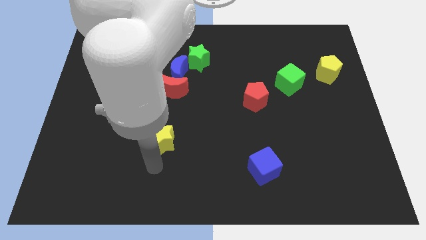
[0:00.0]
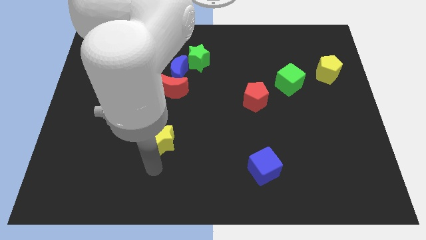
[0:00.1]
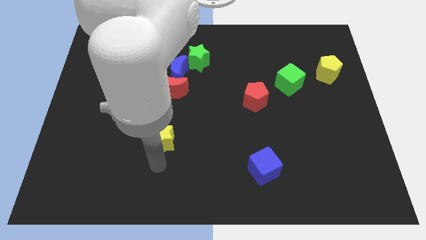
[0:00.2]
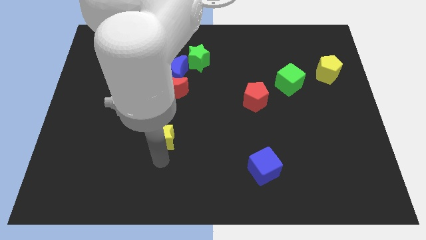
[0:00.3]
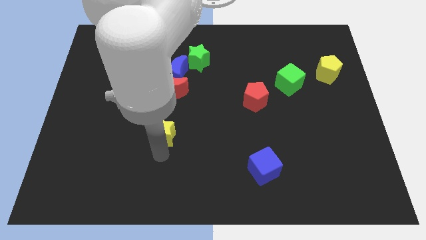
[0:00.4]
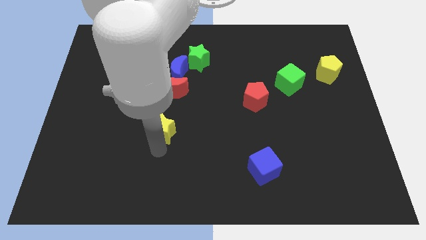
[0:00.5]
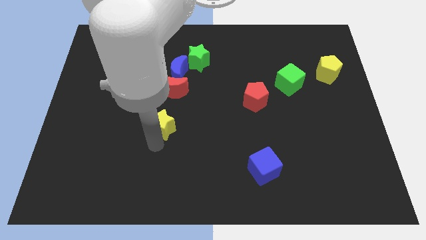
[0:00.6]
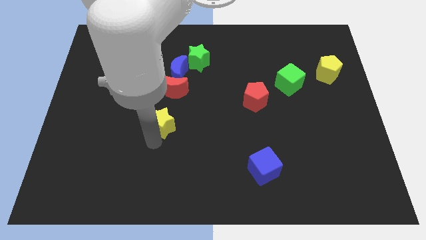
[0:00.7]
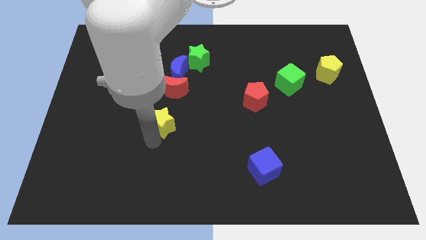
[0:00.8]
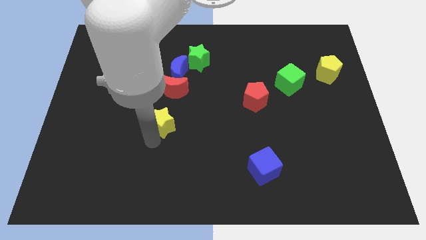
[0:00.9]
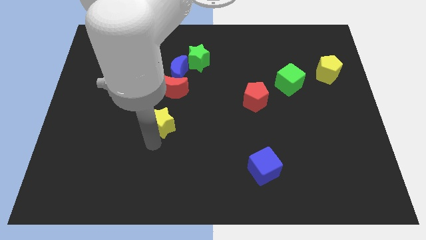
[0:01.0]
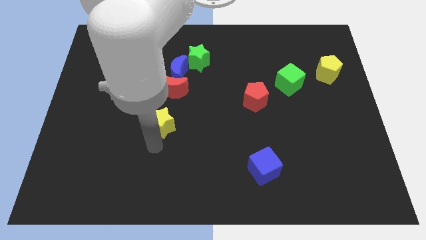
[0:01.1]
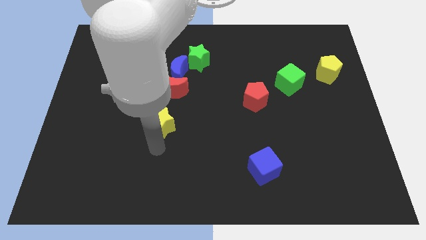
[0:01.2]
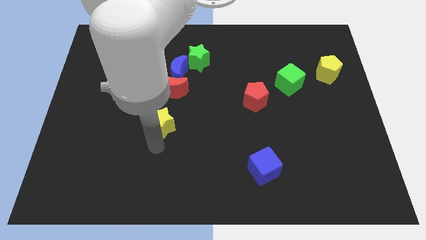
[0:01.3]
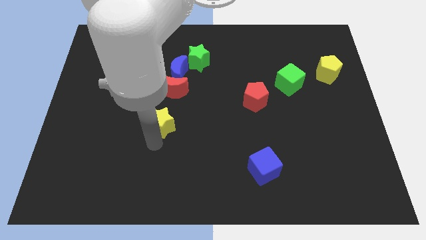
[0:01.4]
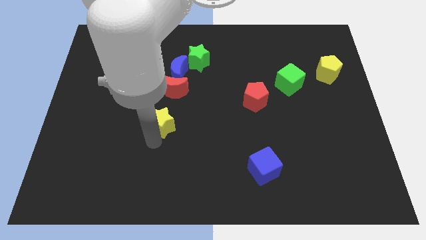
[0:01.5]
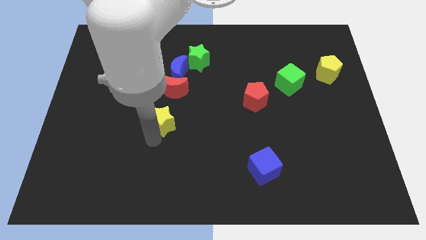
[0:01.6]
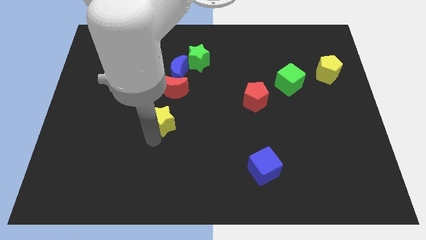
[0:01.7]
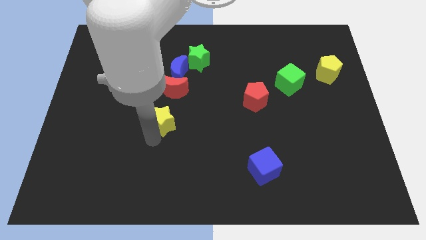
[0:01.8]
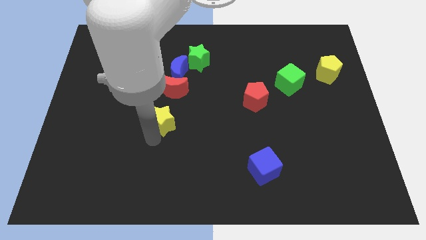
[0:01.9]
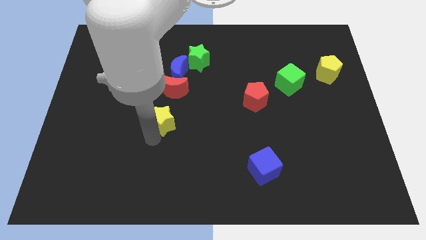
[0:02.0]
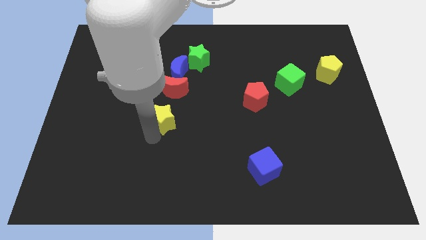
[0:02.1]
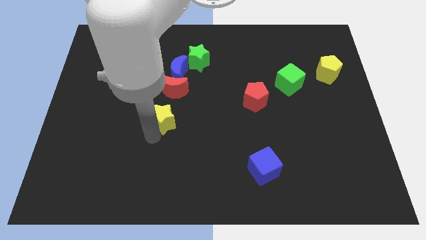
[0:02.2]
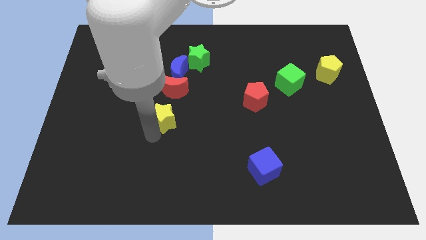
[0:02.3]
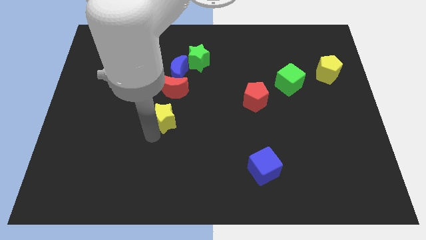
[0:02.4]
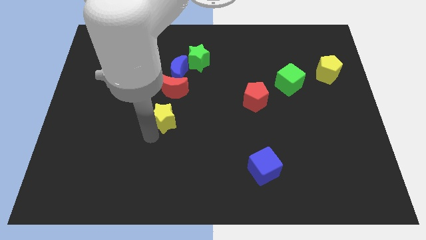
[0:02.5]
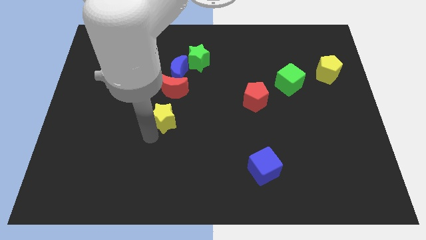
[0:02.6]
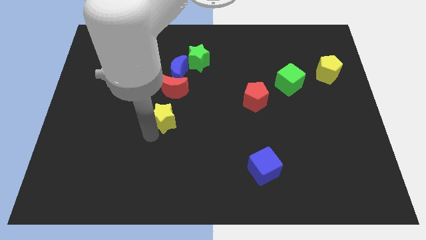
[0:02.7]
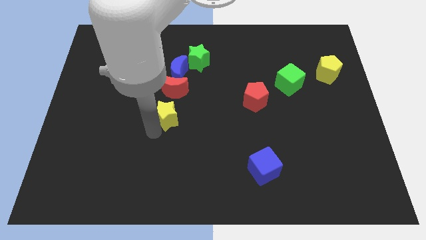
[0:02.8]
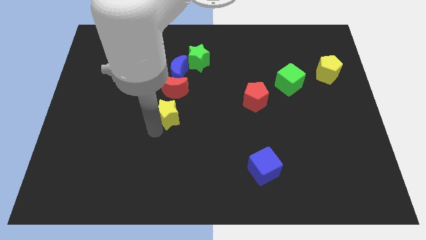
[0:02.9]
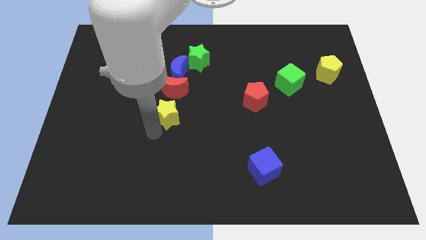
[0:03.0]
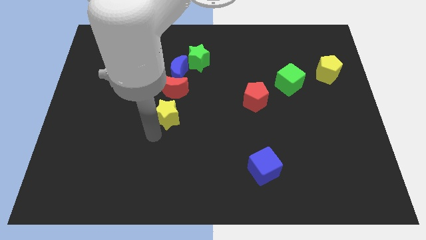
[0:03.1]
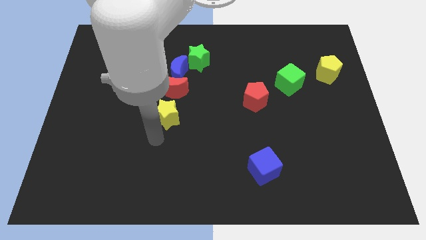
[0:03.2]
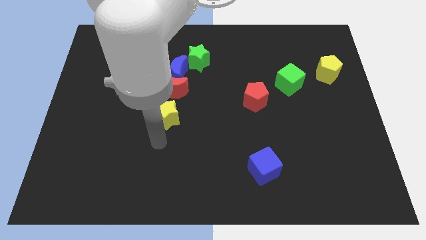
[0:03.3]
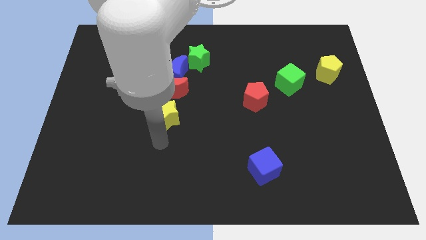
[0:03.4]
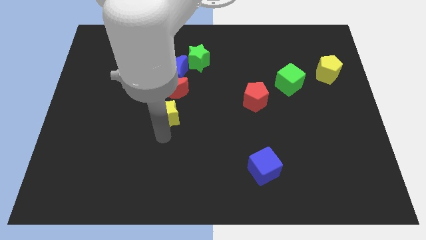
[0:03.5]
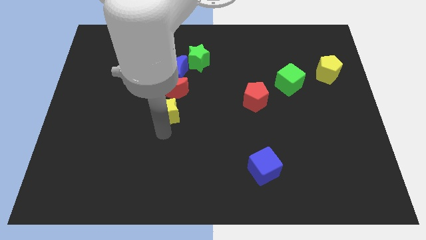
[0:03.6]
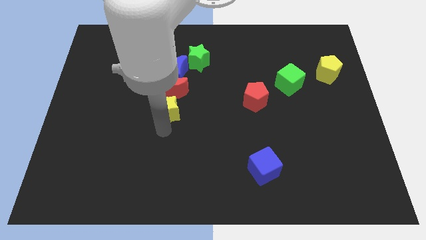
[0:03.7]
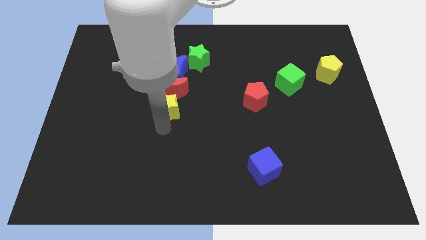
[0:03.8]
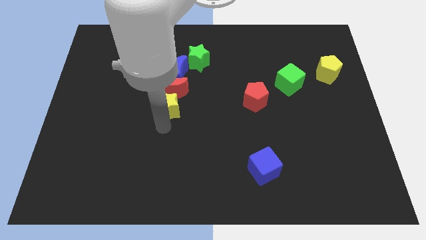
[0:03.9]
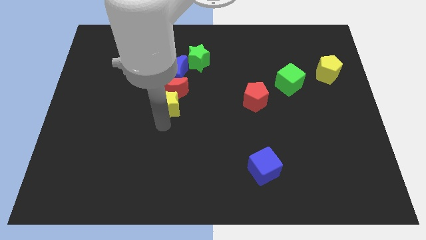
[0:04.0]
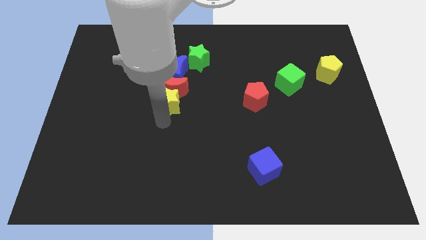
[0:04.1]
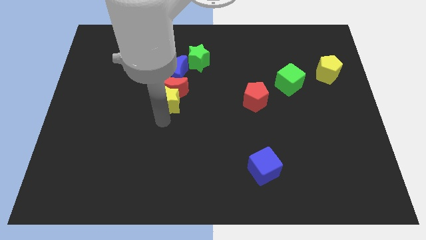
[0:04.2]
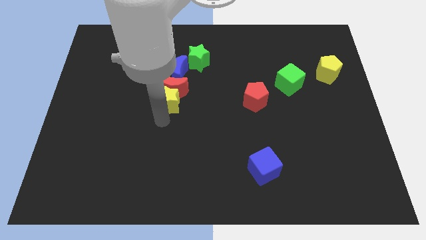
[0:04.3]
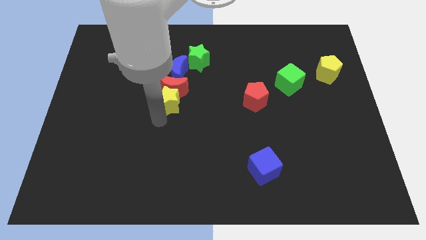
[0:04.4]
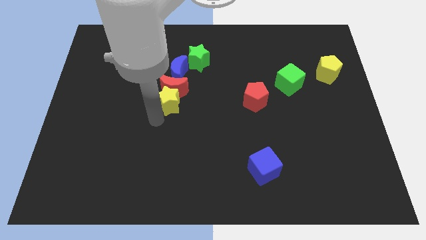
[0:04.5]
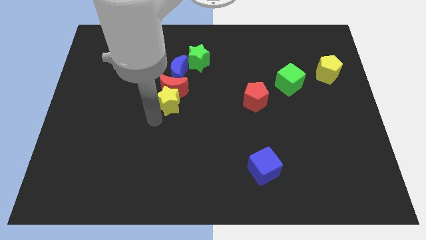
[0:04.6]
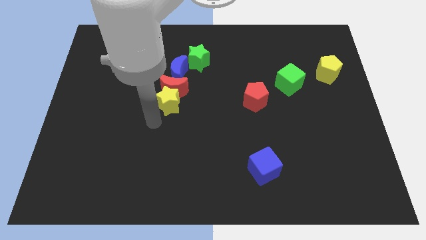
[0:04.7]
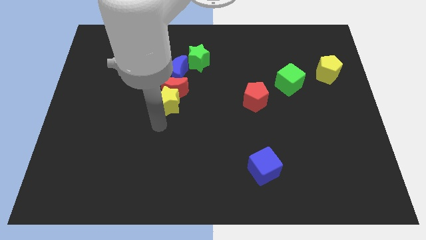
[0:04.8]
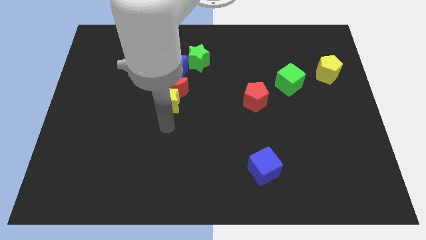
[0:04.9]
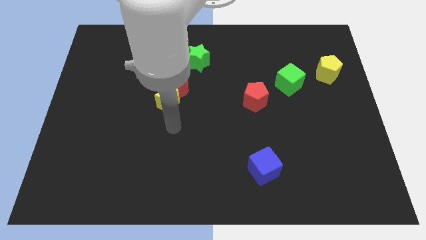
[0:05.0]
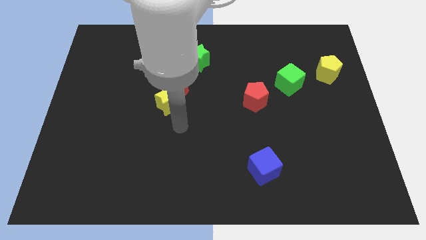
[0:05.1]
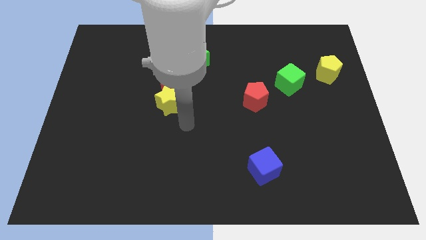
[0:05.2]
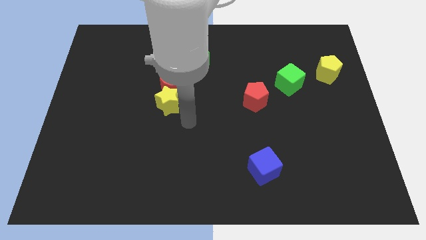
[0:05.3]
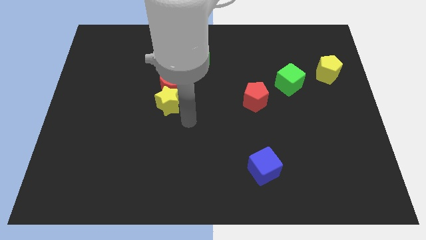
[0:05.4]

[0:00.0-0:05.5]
place the yellow star below the red crescent

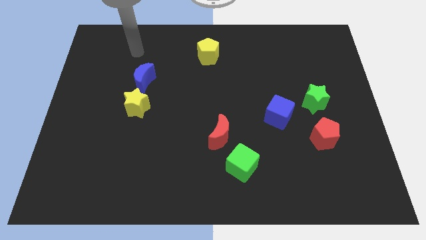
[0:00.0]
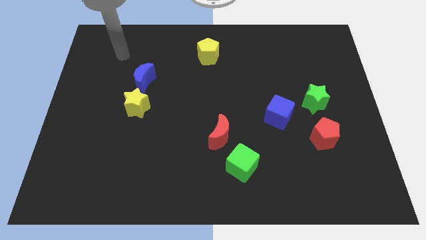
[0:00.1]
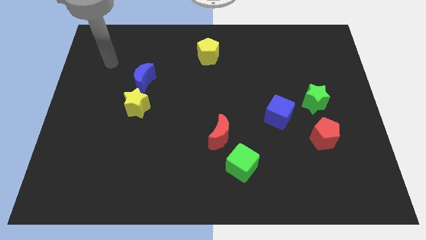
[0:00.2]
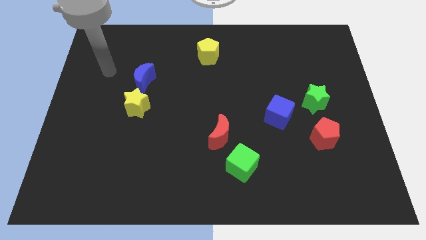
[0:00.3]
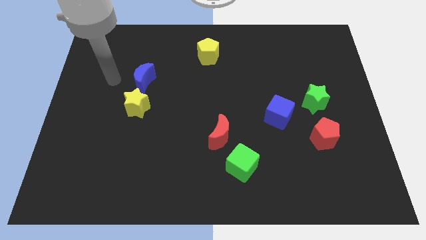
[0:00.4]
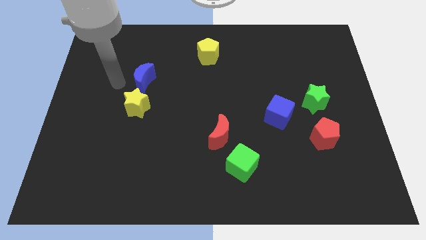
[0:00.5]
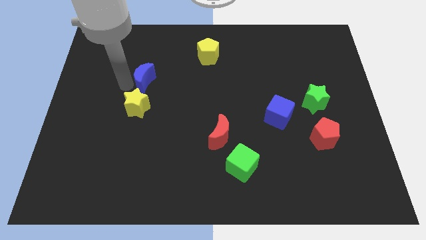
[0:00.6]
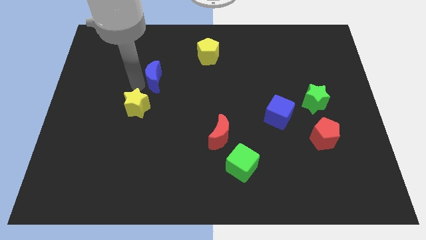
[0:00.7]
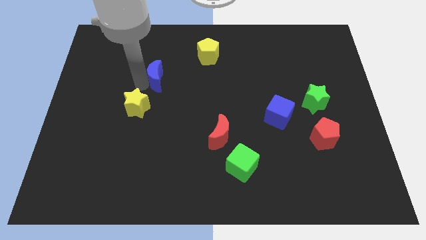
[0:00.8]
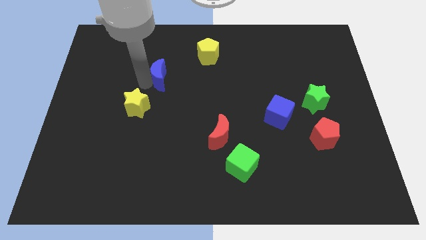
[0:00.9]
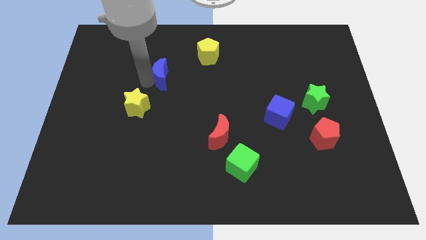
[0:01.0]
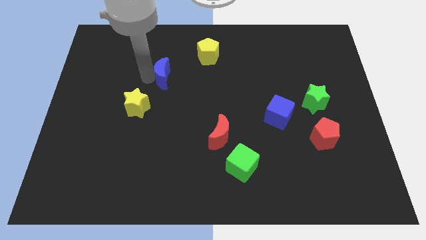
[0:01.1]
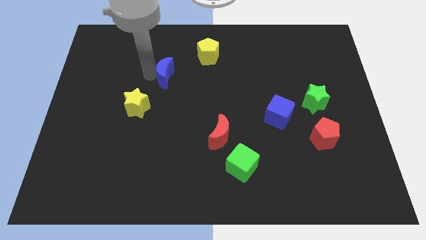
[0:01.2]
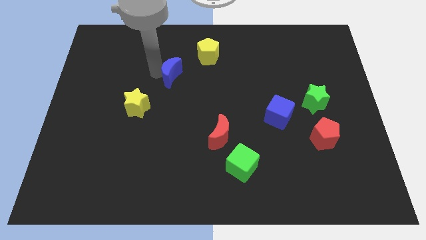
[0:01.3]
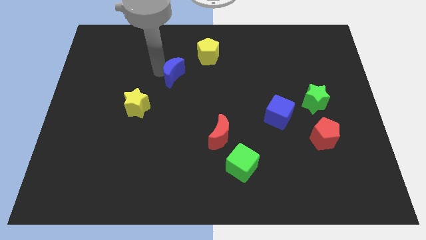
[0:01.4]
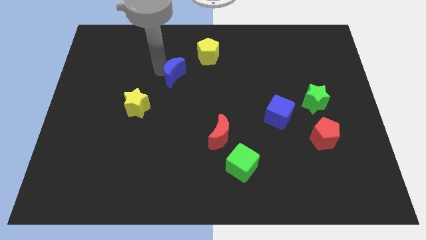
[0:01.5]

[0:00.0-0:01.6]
put the blue moon between the yellow blocks

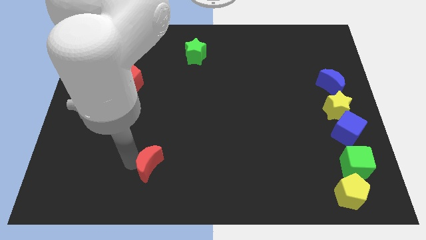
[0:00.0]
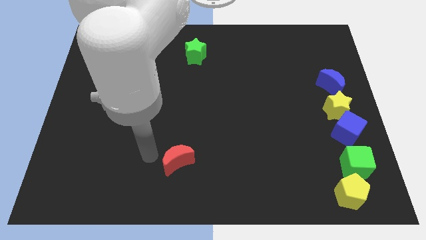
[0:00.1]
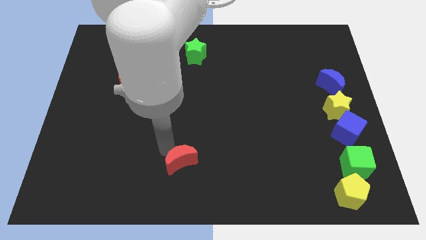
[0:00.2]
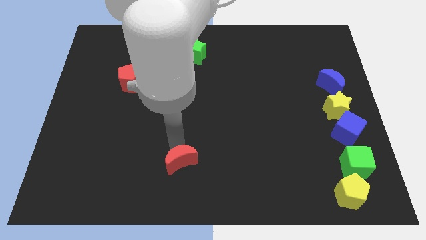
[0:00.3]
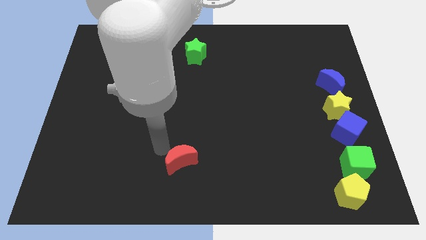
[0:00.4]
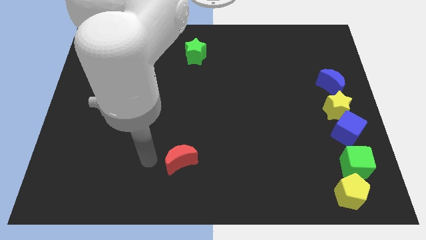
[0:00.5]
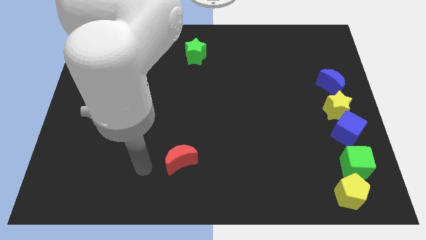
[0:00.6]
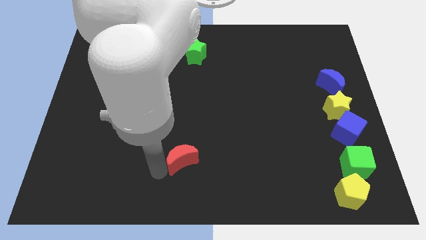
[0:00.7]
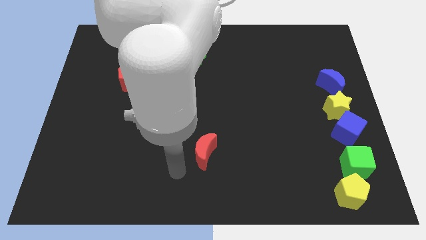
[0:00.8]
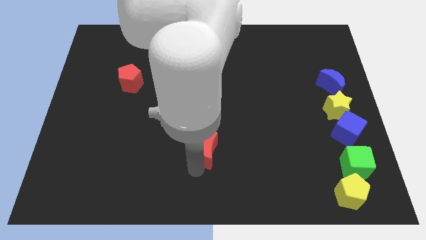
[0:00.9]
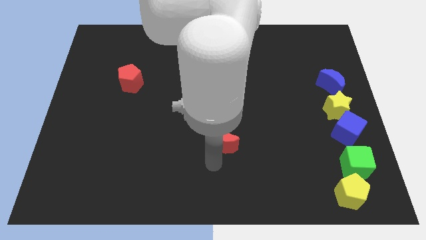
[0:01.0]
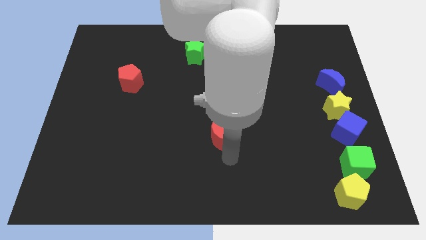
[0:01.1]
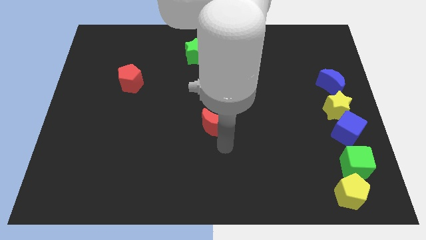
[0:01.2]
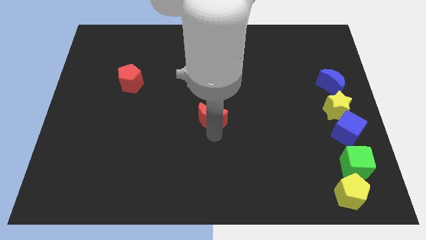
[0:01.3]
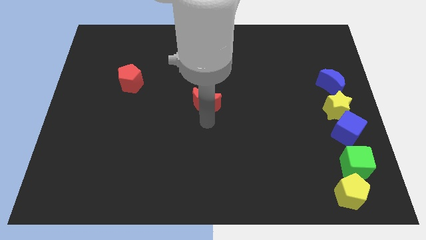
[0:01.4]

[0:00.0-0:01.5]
push the red crescent to the center of the board

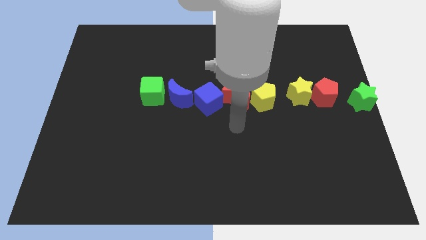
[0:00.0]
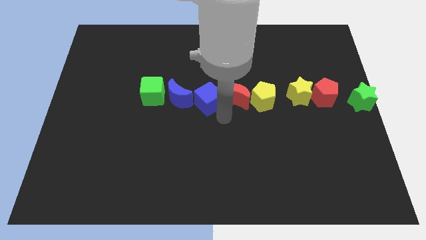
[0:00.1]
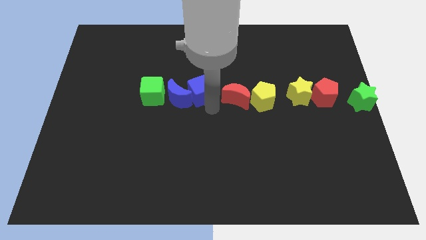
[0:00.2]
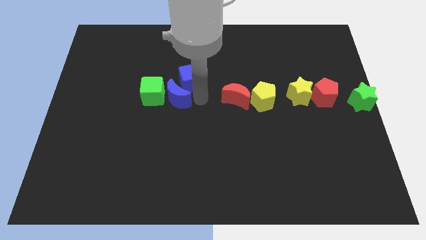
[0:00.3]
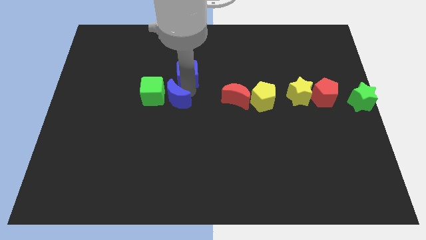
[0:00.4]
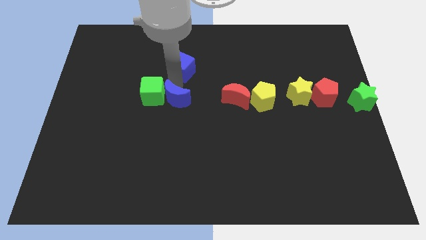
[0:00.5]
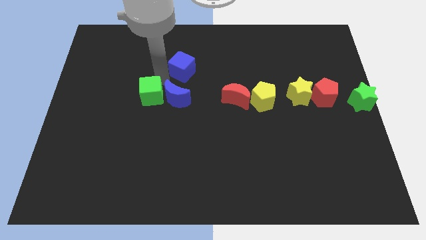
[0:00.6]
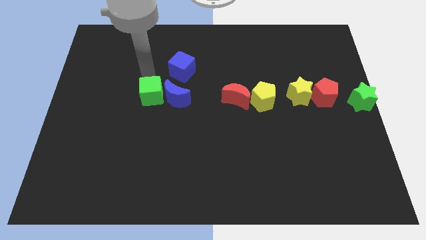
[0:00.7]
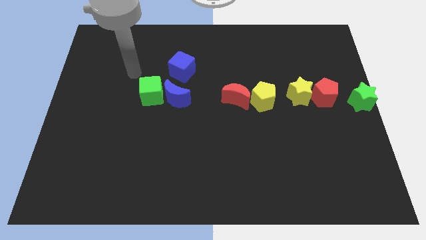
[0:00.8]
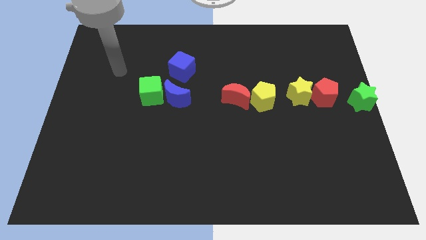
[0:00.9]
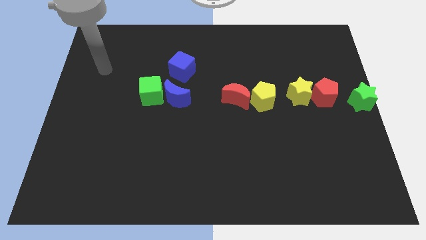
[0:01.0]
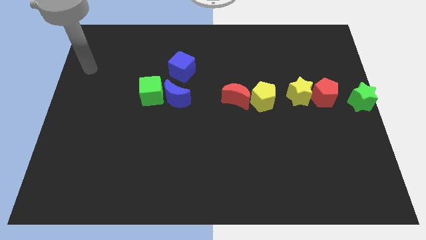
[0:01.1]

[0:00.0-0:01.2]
place the blue cube above the blue moon
